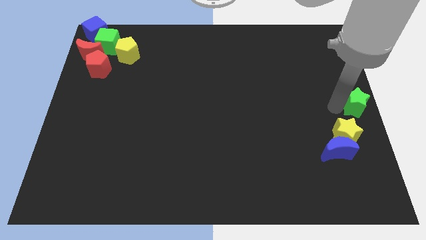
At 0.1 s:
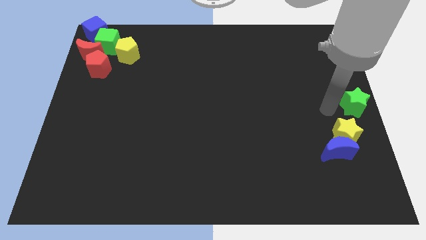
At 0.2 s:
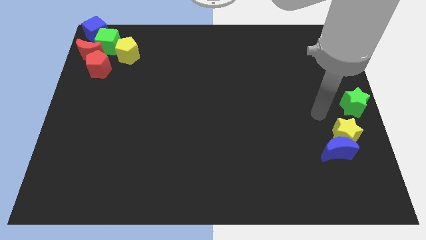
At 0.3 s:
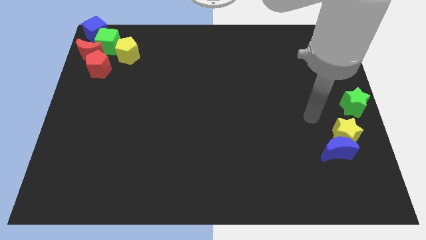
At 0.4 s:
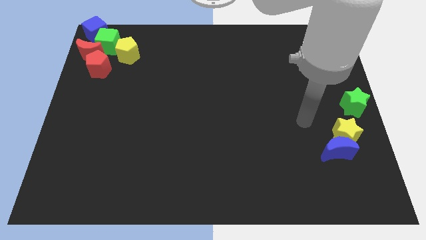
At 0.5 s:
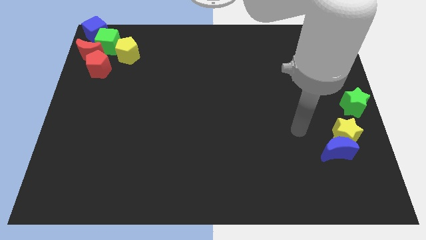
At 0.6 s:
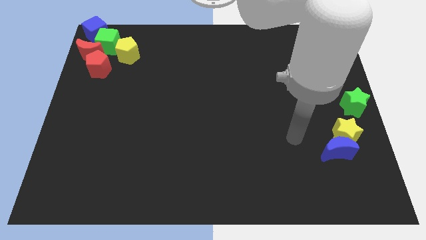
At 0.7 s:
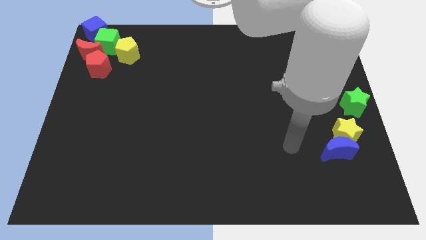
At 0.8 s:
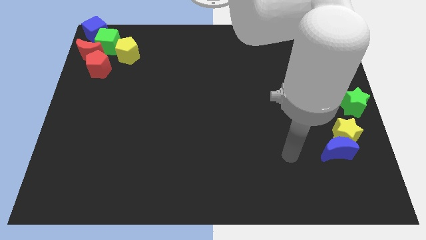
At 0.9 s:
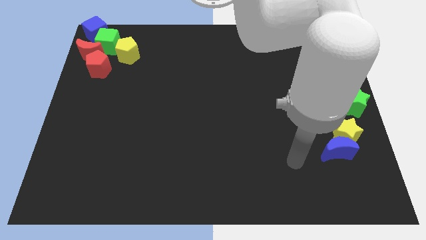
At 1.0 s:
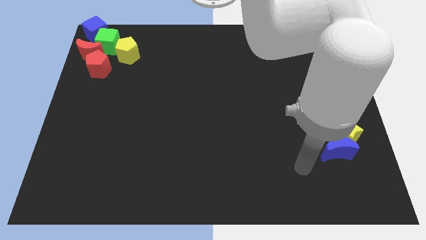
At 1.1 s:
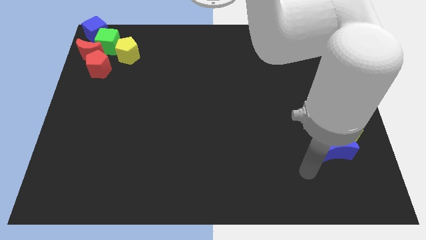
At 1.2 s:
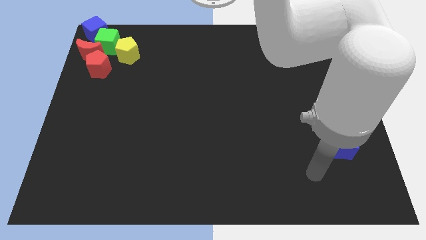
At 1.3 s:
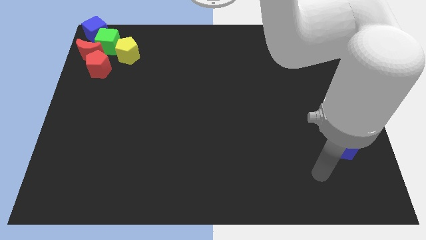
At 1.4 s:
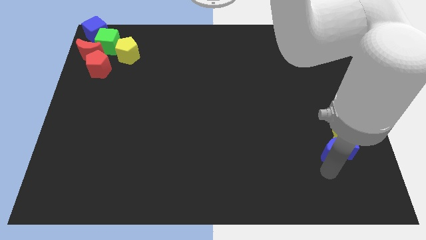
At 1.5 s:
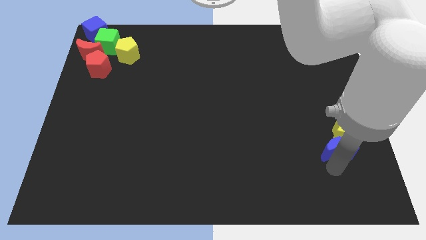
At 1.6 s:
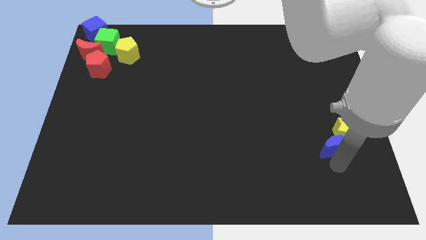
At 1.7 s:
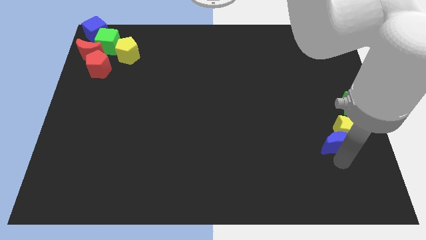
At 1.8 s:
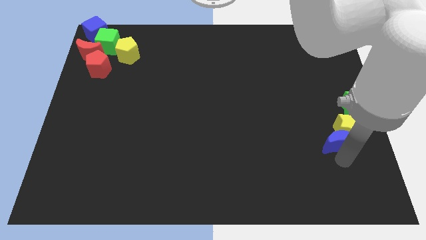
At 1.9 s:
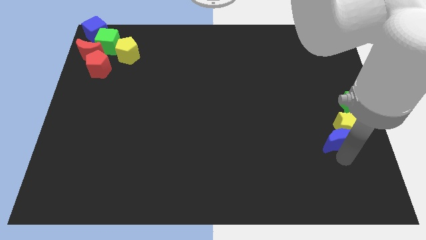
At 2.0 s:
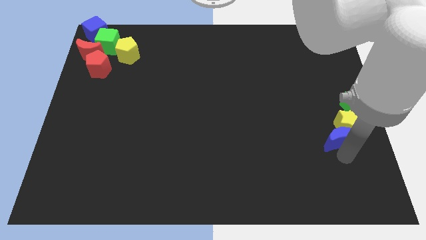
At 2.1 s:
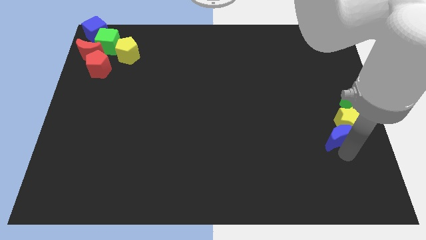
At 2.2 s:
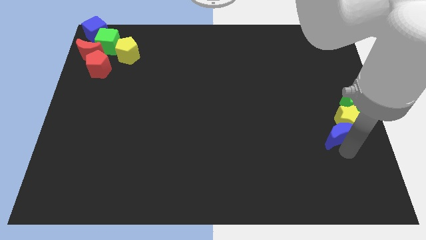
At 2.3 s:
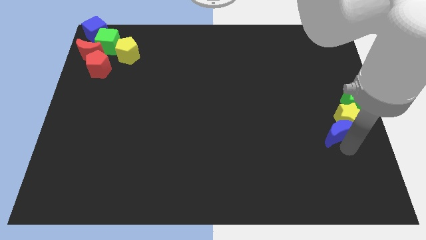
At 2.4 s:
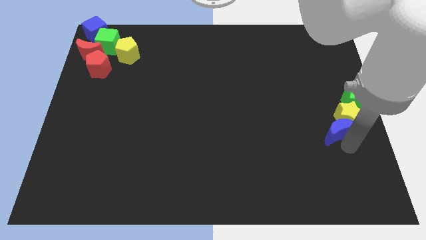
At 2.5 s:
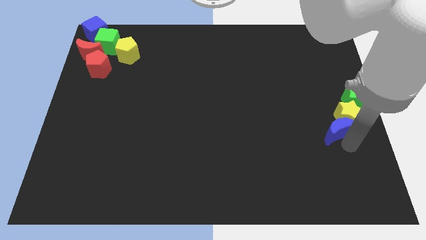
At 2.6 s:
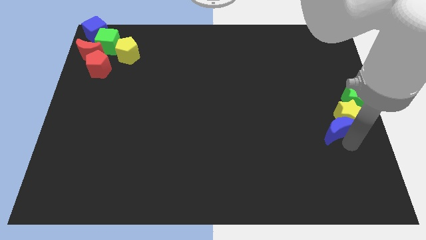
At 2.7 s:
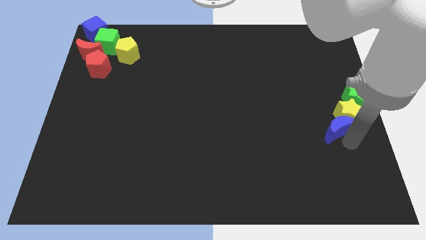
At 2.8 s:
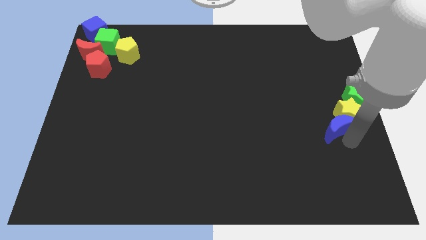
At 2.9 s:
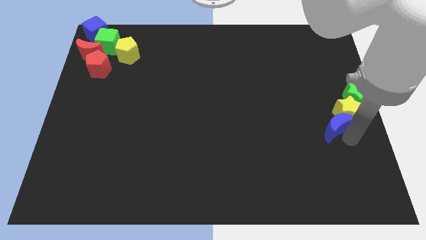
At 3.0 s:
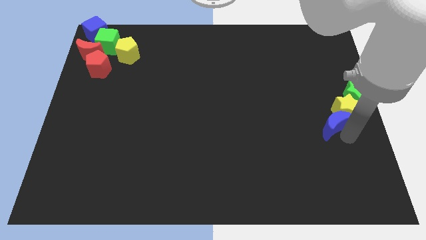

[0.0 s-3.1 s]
move the blue crescent and yellow star into the green star

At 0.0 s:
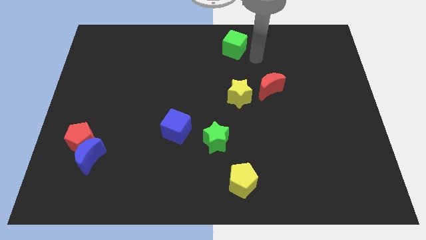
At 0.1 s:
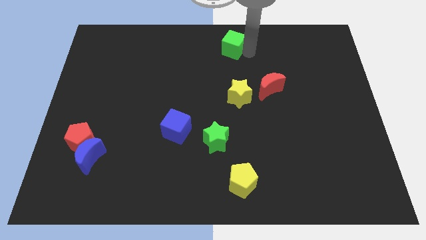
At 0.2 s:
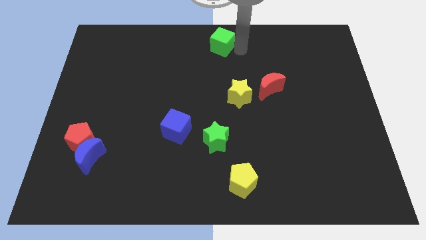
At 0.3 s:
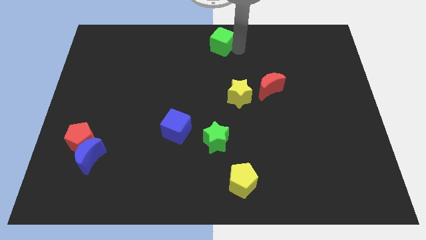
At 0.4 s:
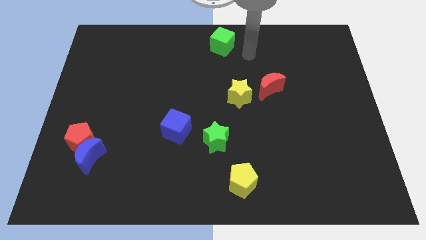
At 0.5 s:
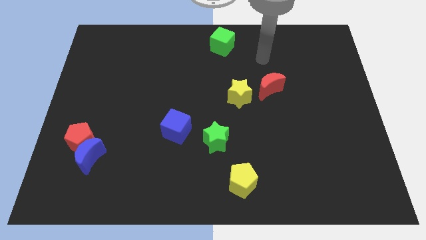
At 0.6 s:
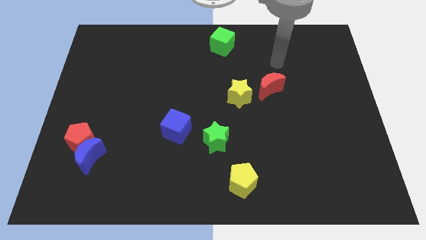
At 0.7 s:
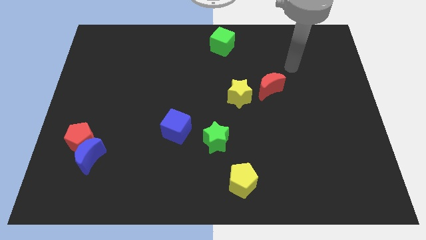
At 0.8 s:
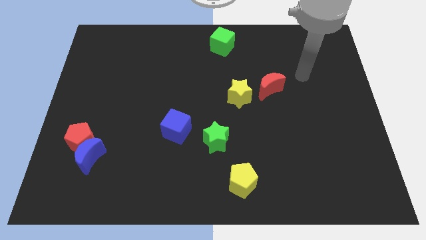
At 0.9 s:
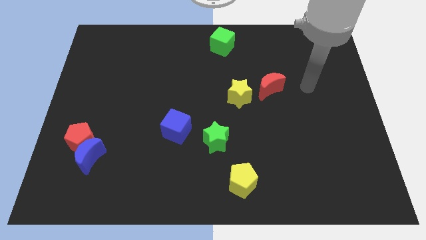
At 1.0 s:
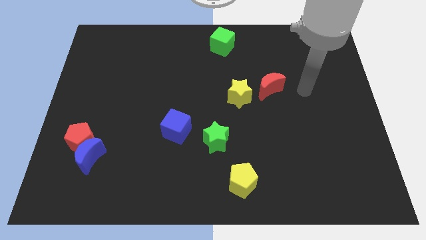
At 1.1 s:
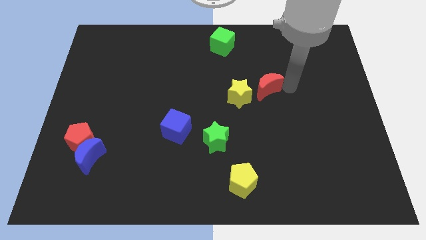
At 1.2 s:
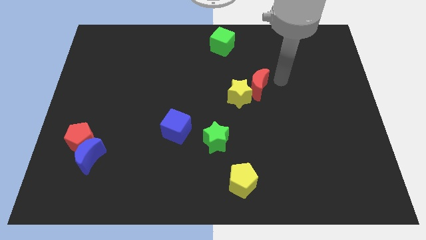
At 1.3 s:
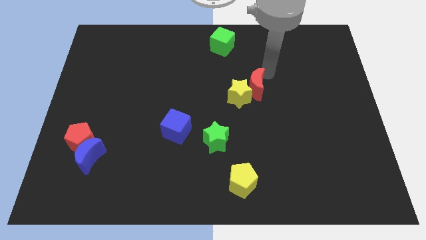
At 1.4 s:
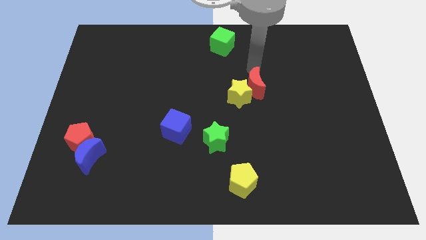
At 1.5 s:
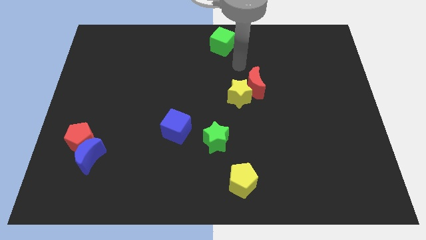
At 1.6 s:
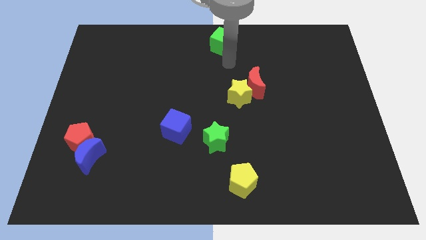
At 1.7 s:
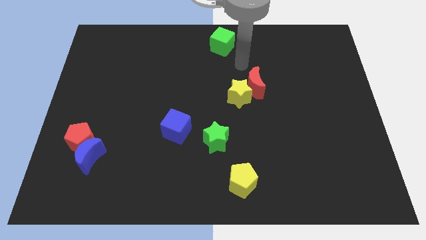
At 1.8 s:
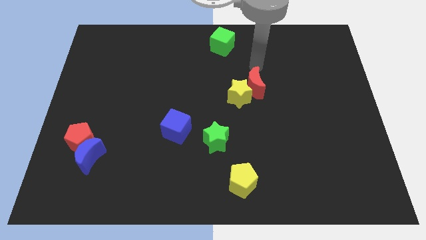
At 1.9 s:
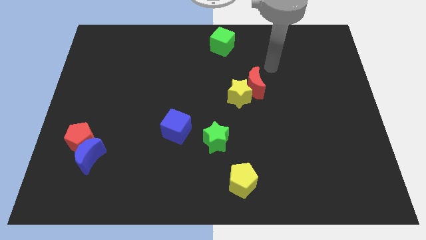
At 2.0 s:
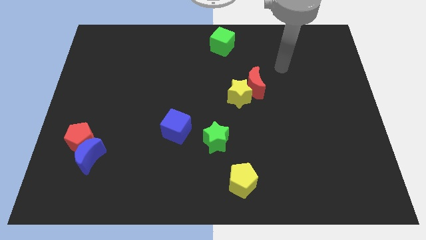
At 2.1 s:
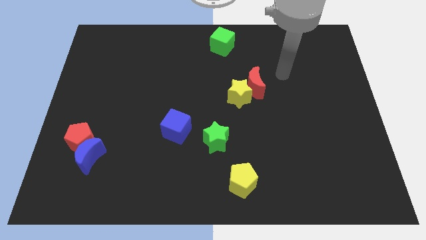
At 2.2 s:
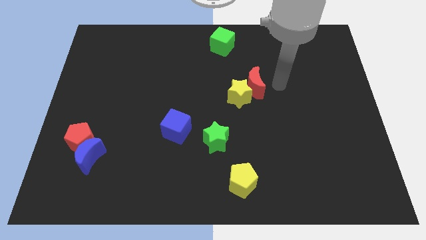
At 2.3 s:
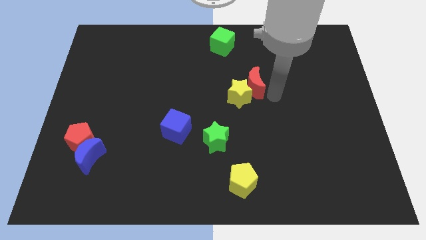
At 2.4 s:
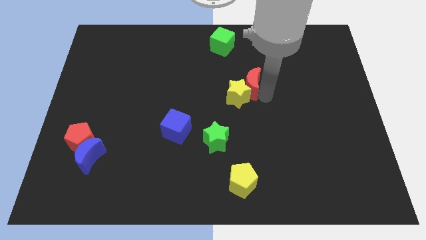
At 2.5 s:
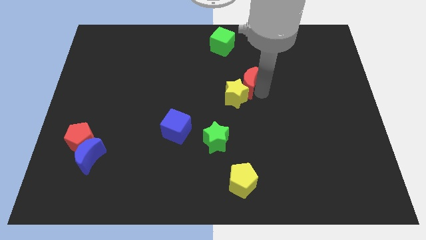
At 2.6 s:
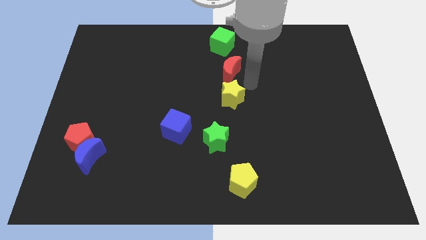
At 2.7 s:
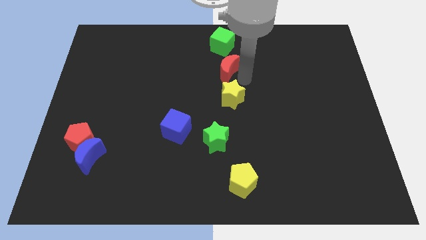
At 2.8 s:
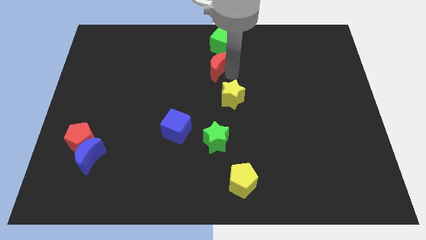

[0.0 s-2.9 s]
place red moon below green cube

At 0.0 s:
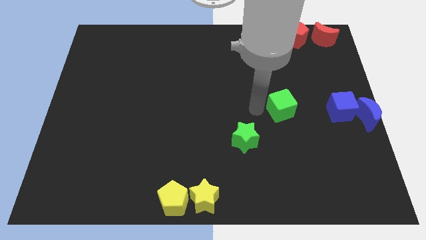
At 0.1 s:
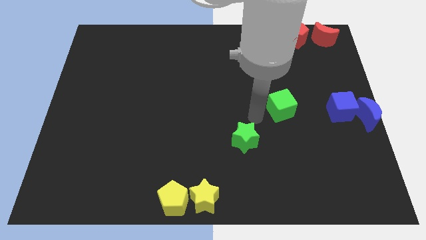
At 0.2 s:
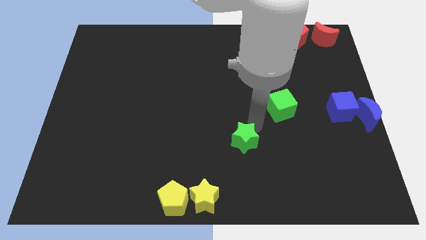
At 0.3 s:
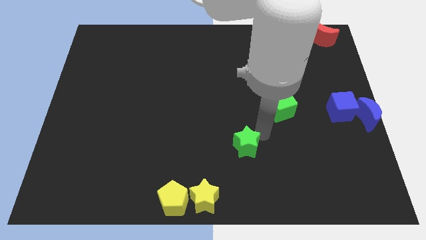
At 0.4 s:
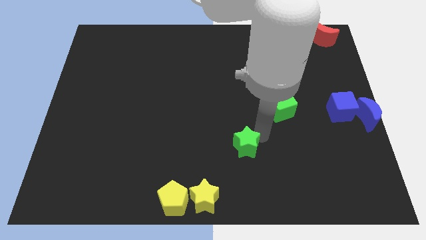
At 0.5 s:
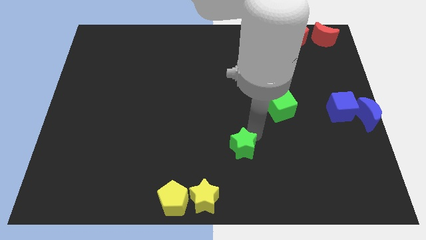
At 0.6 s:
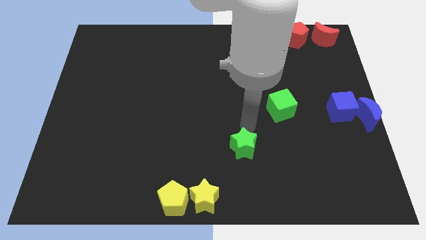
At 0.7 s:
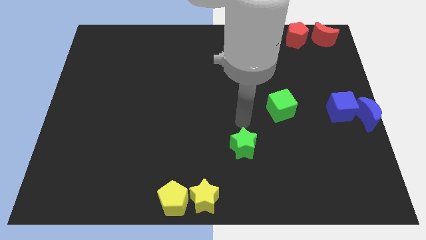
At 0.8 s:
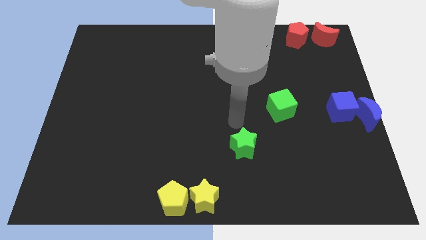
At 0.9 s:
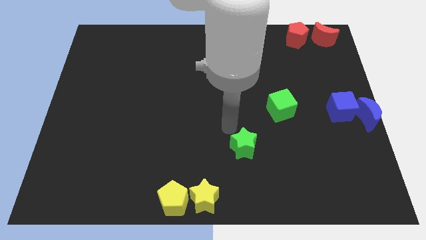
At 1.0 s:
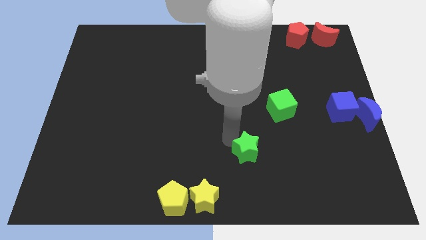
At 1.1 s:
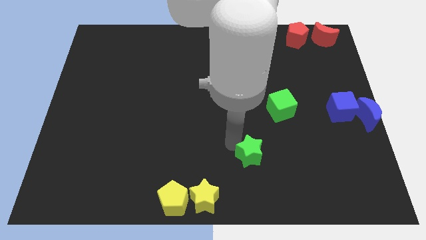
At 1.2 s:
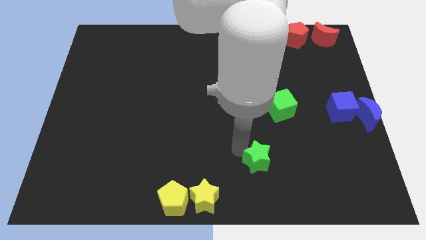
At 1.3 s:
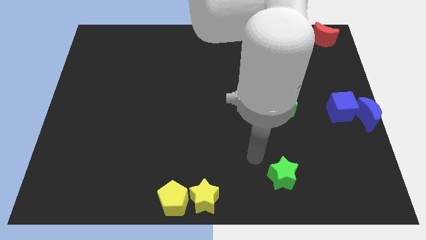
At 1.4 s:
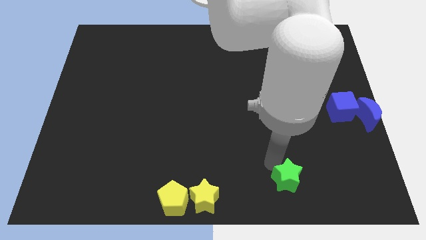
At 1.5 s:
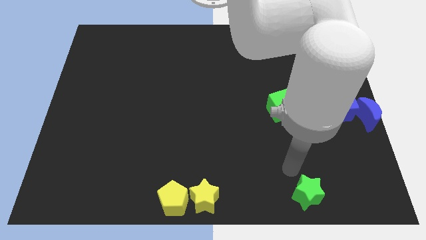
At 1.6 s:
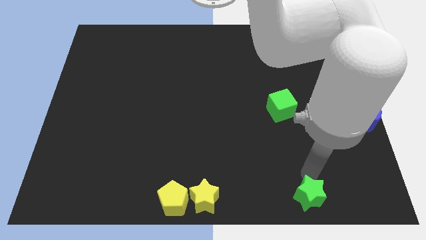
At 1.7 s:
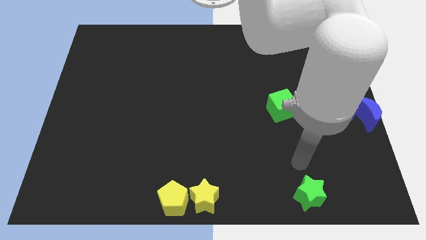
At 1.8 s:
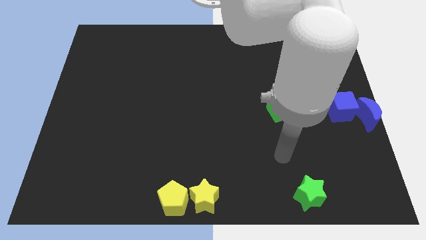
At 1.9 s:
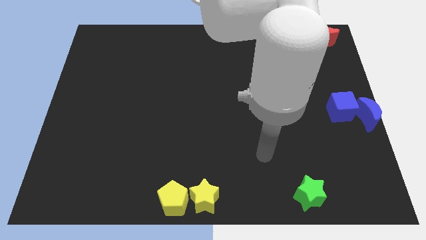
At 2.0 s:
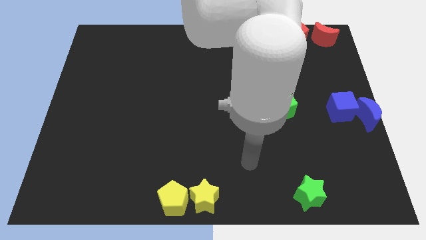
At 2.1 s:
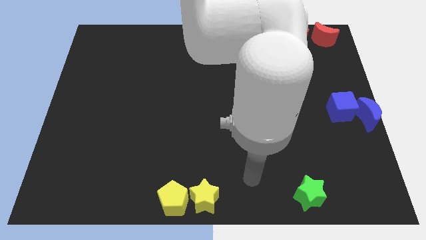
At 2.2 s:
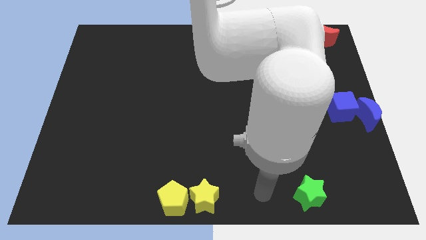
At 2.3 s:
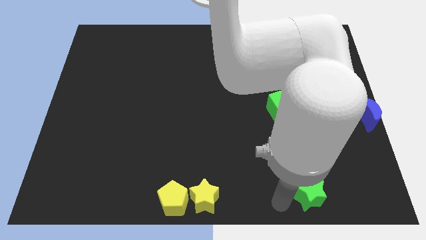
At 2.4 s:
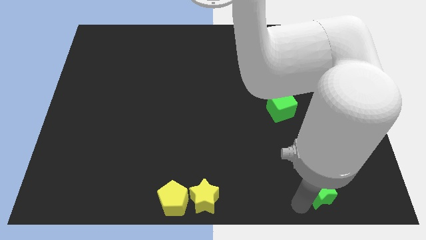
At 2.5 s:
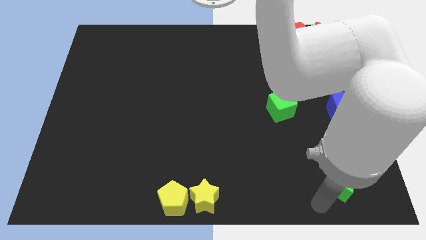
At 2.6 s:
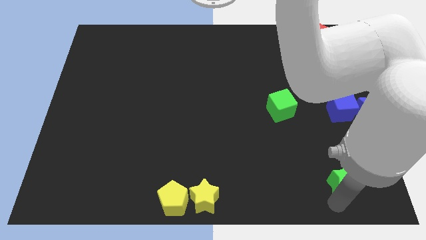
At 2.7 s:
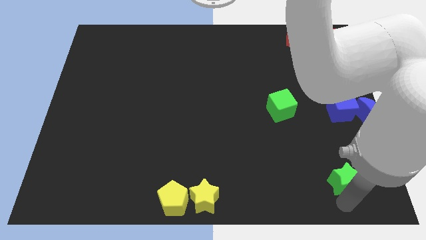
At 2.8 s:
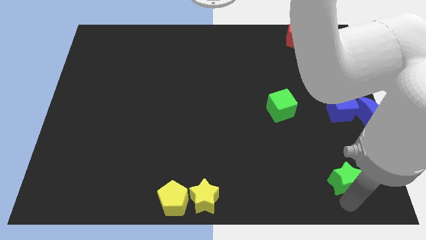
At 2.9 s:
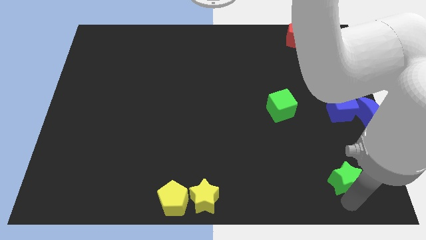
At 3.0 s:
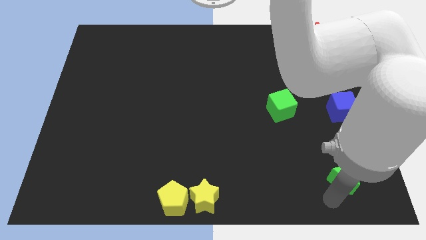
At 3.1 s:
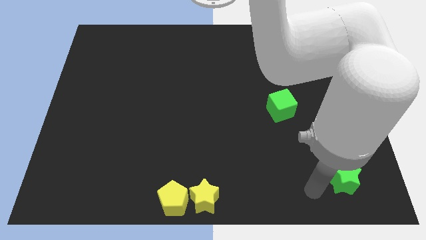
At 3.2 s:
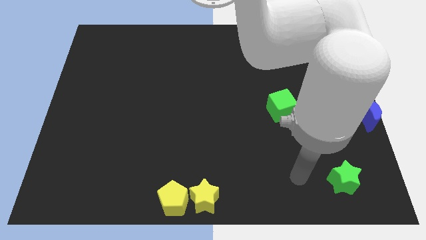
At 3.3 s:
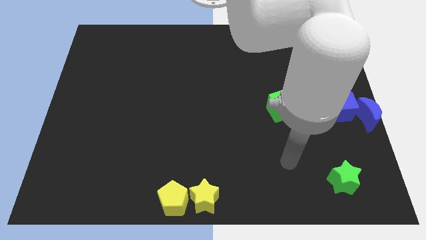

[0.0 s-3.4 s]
push the green star to the bottom side of the blue cube
